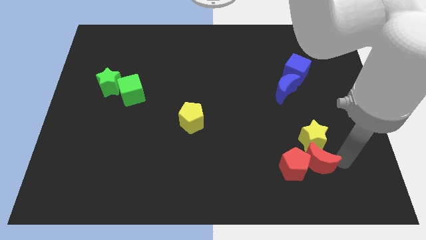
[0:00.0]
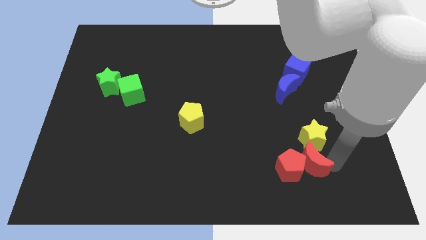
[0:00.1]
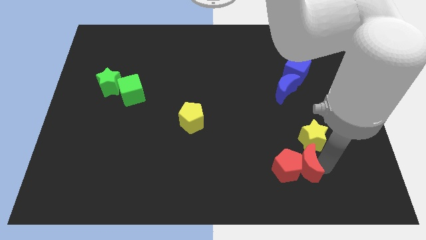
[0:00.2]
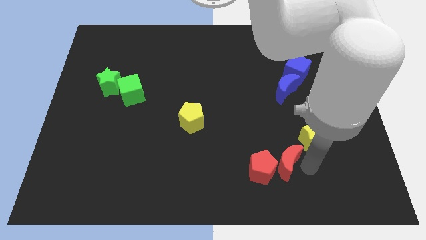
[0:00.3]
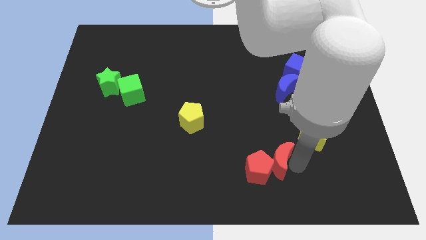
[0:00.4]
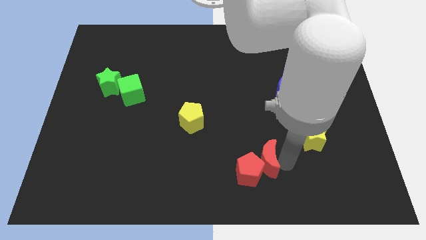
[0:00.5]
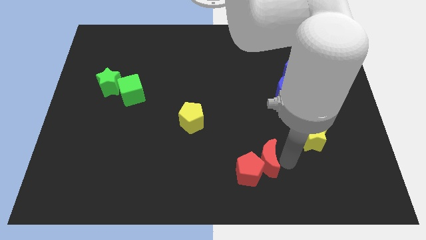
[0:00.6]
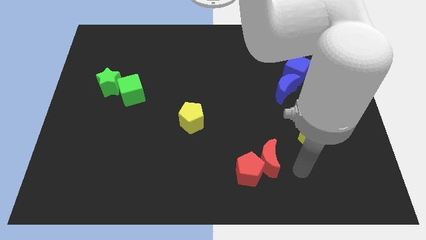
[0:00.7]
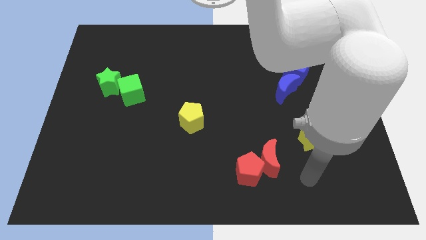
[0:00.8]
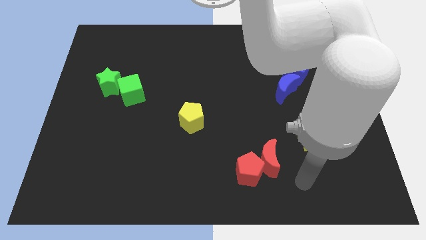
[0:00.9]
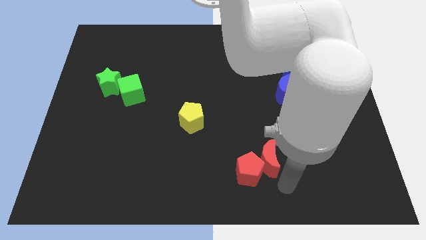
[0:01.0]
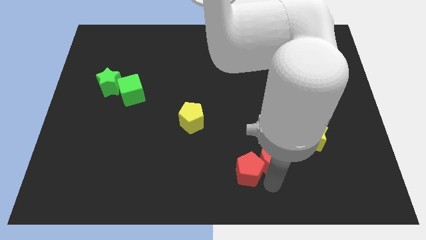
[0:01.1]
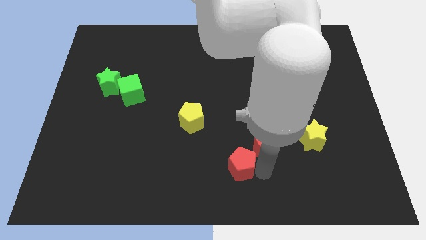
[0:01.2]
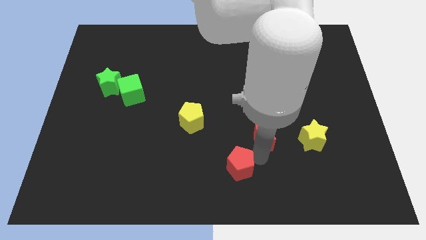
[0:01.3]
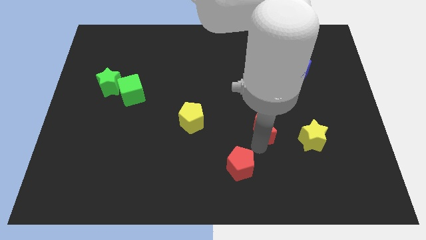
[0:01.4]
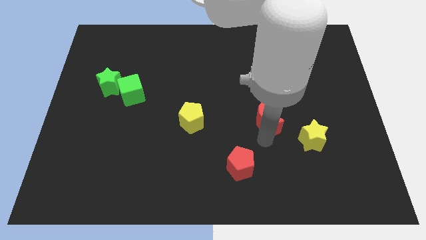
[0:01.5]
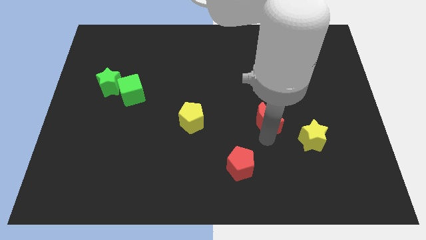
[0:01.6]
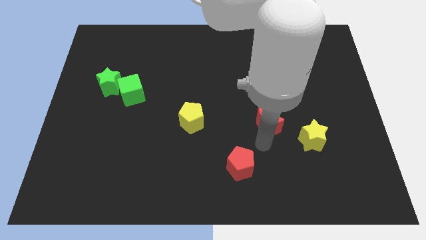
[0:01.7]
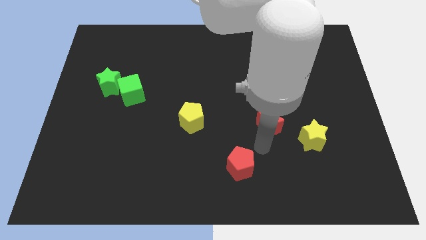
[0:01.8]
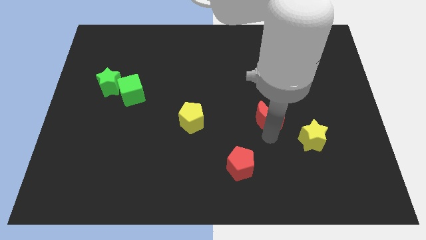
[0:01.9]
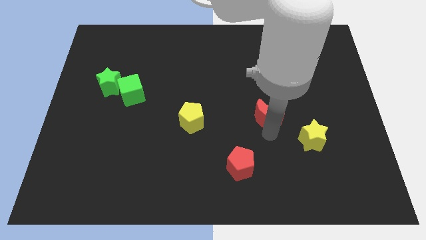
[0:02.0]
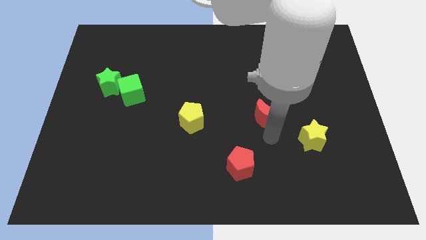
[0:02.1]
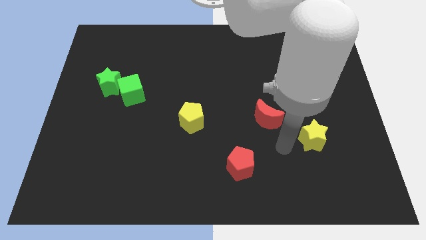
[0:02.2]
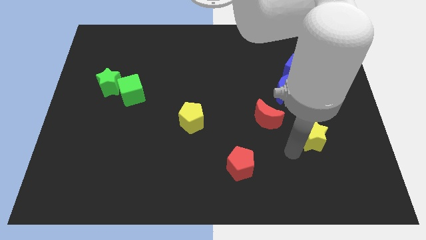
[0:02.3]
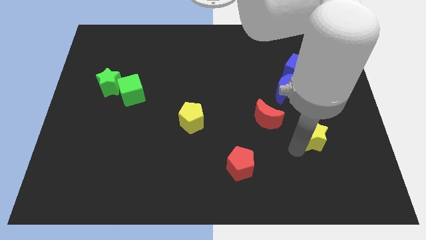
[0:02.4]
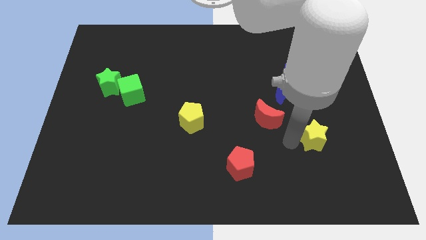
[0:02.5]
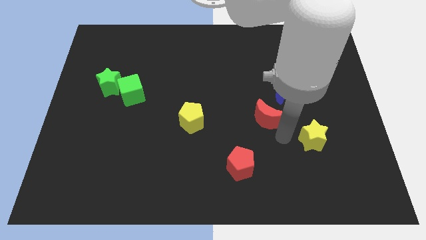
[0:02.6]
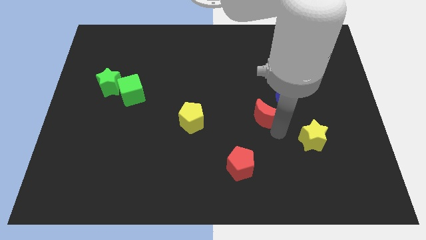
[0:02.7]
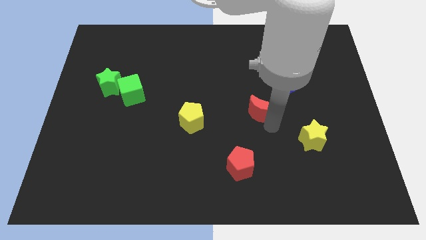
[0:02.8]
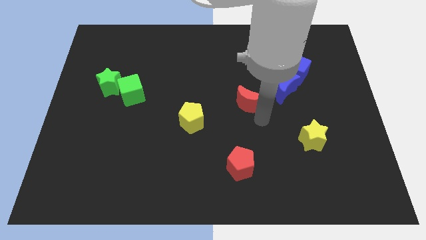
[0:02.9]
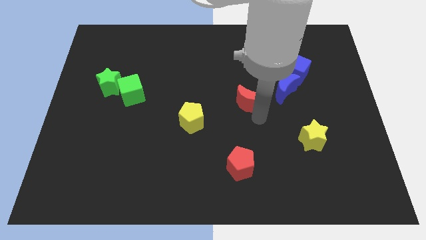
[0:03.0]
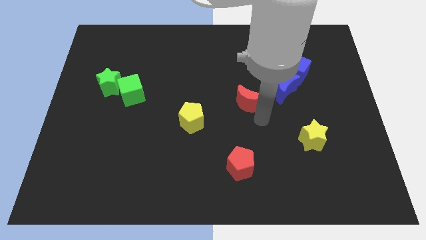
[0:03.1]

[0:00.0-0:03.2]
place red moon to the bottom left of blue moon

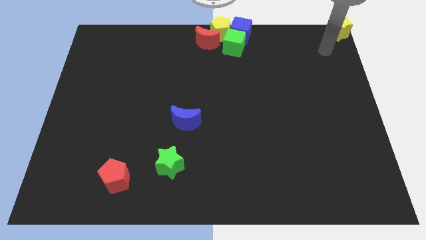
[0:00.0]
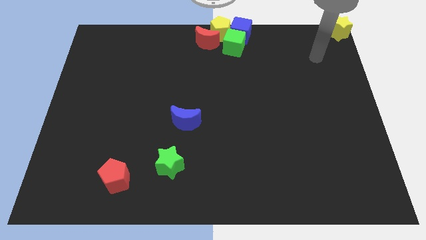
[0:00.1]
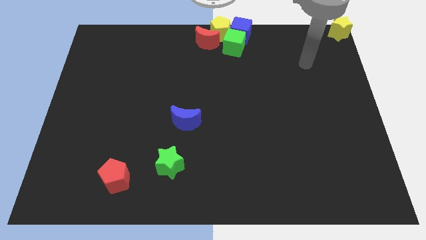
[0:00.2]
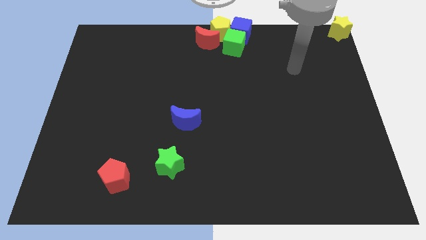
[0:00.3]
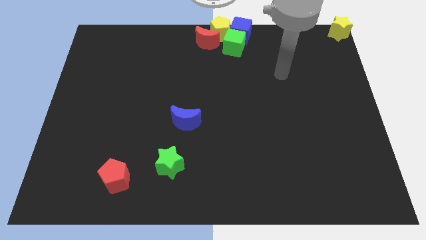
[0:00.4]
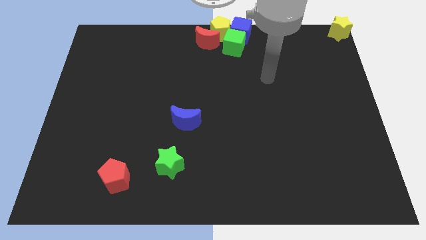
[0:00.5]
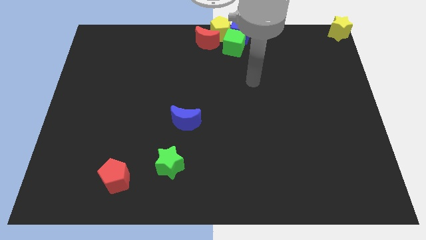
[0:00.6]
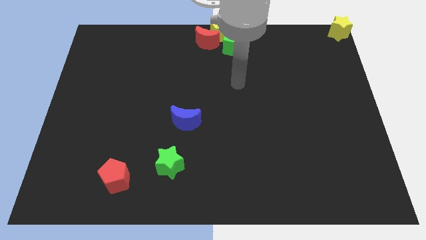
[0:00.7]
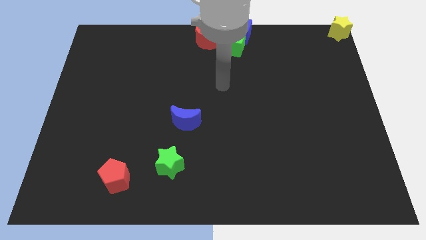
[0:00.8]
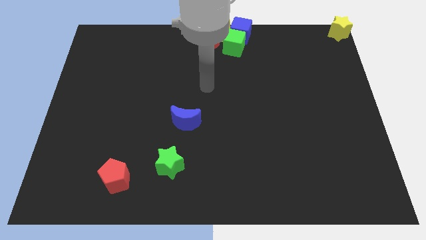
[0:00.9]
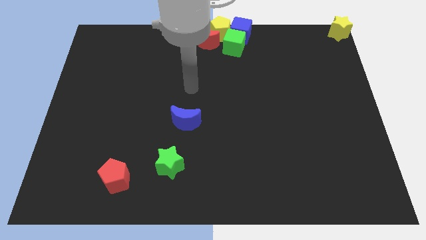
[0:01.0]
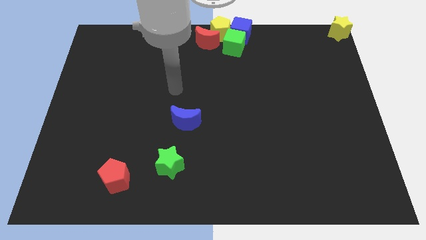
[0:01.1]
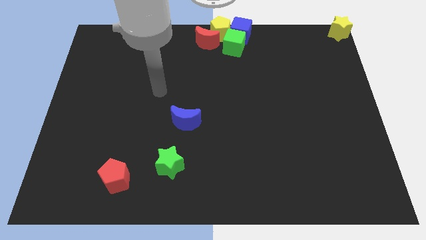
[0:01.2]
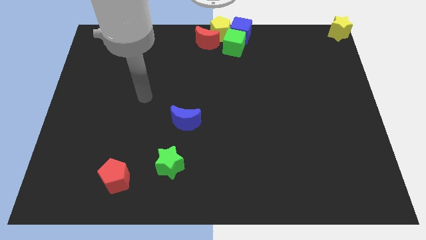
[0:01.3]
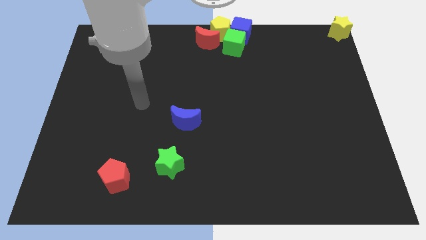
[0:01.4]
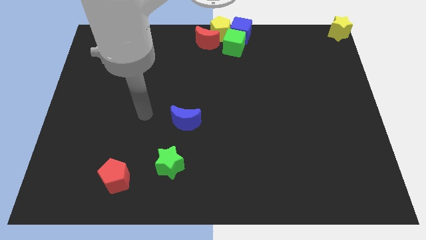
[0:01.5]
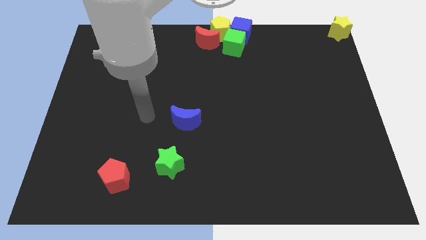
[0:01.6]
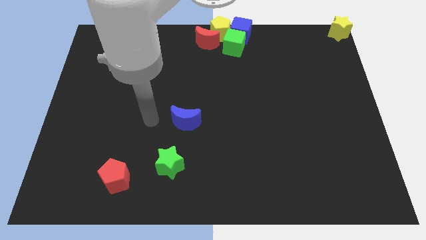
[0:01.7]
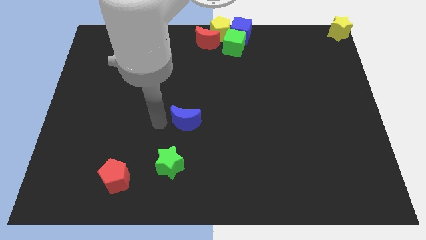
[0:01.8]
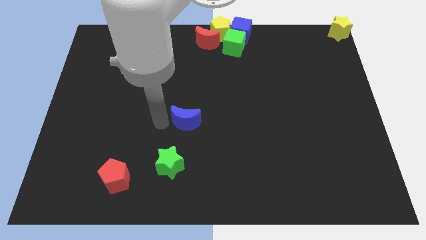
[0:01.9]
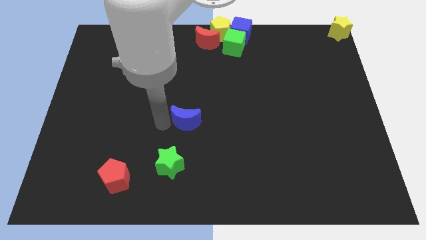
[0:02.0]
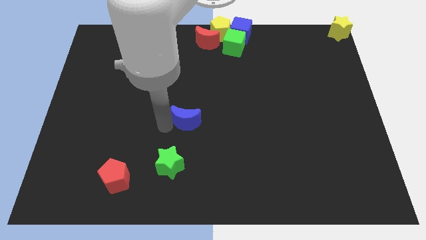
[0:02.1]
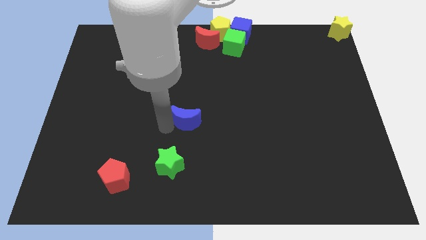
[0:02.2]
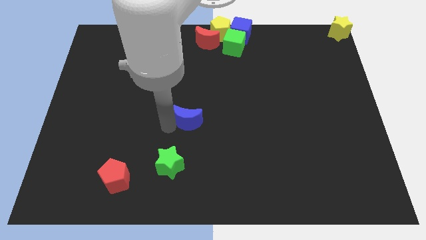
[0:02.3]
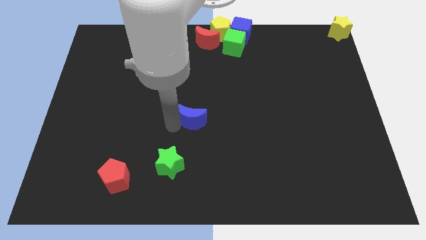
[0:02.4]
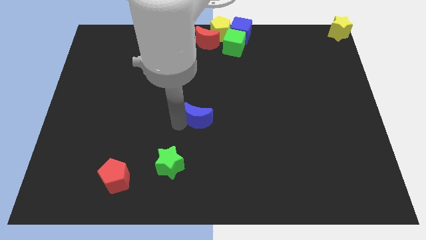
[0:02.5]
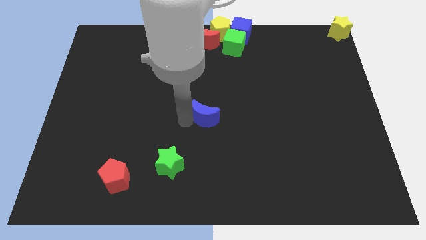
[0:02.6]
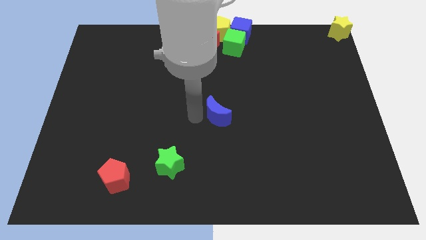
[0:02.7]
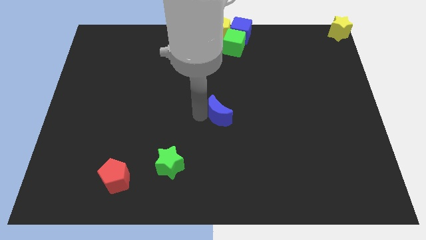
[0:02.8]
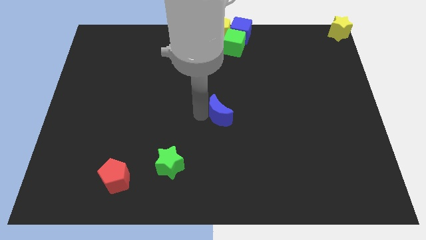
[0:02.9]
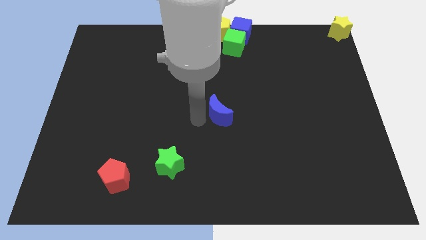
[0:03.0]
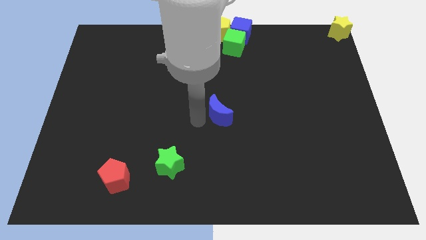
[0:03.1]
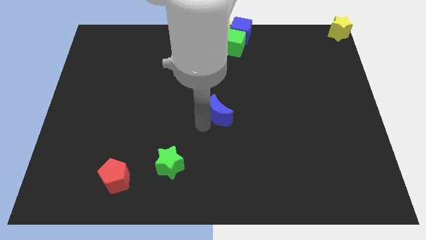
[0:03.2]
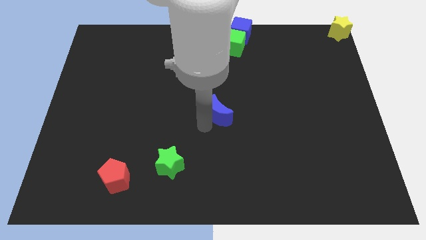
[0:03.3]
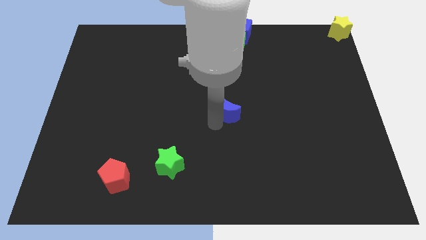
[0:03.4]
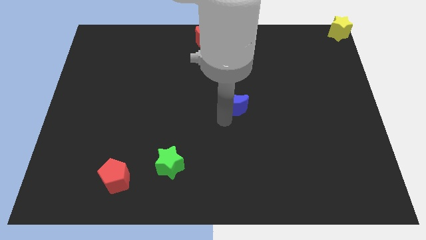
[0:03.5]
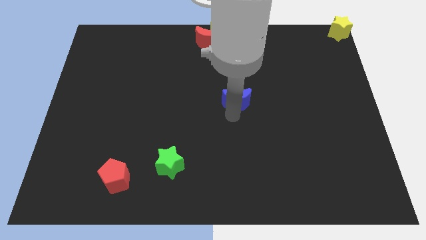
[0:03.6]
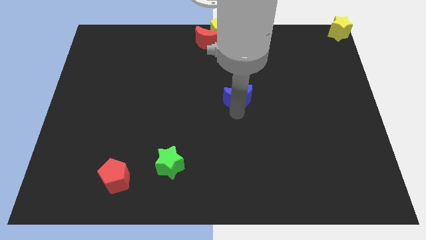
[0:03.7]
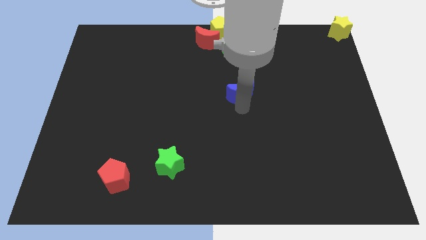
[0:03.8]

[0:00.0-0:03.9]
move the blue moon diagonally top right to the green star

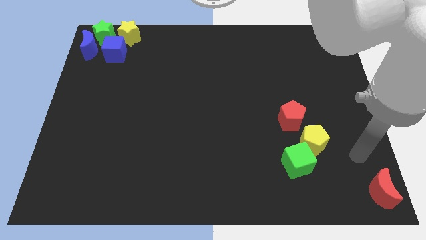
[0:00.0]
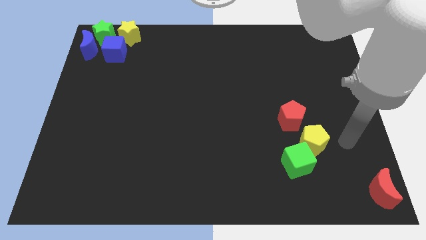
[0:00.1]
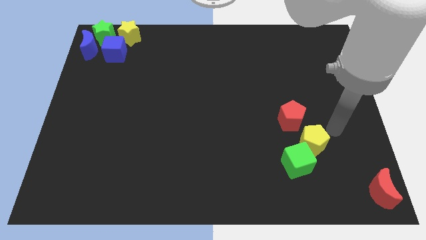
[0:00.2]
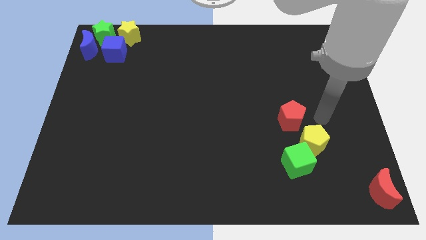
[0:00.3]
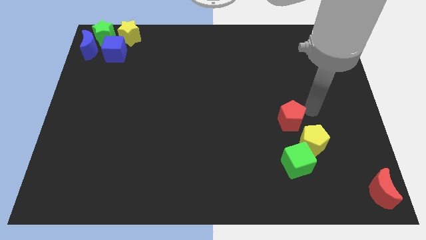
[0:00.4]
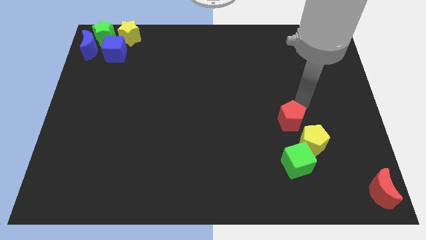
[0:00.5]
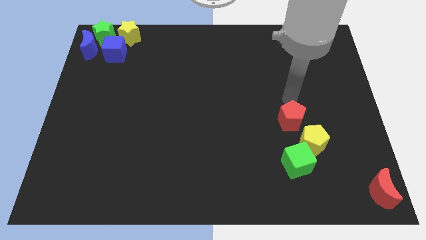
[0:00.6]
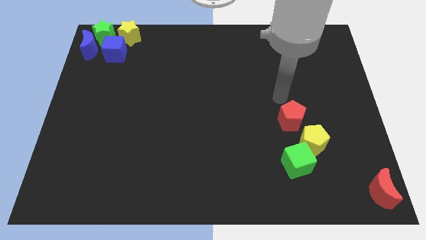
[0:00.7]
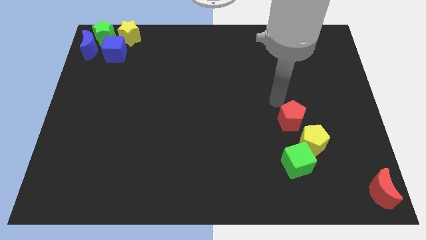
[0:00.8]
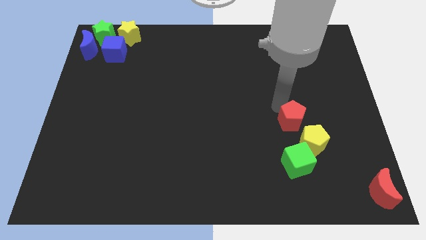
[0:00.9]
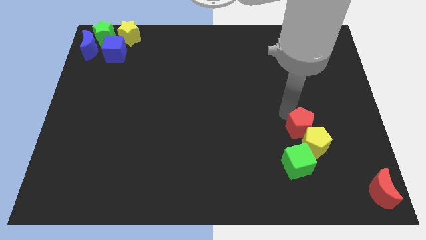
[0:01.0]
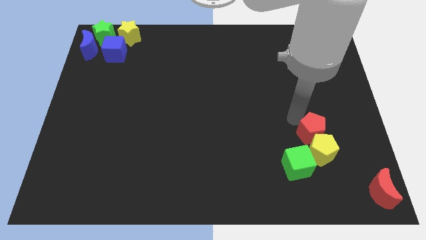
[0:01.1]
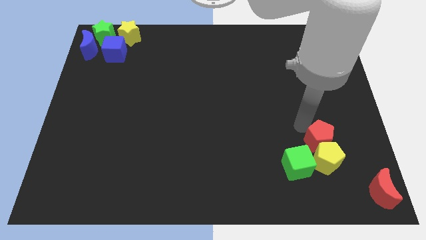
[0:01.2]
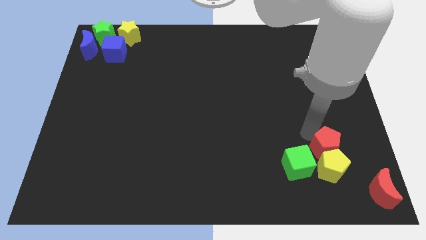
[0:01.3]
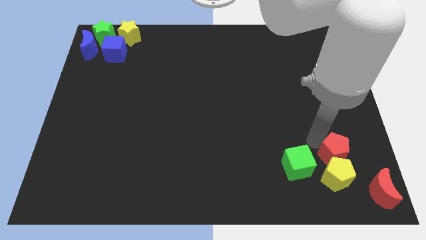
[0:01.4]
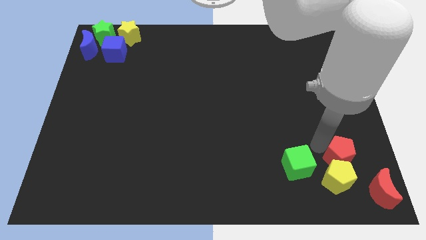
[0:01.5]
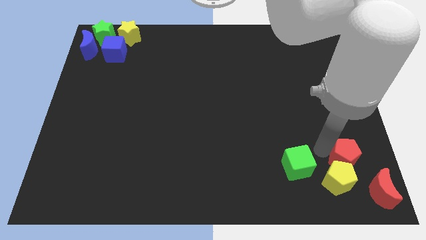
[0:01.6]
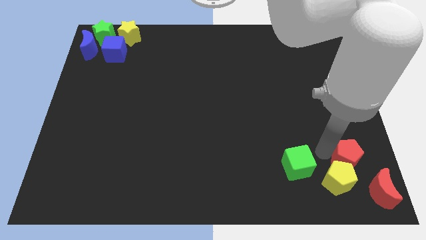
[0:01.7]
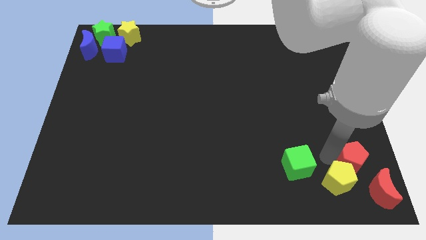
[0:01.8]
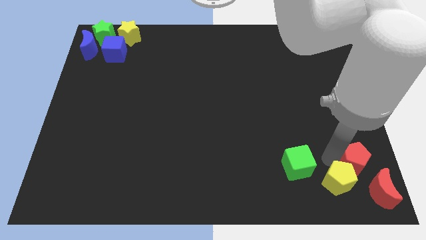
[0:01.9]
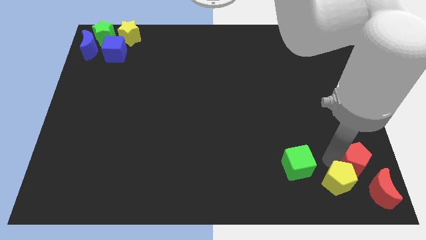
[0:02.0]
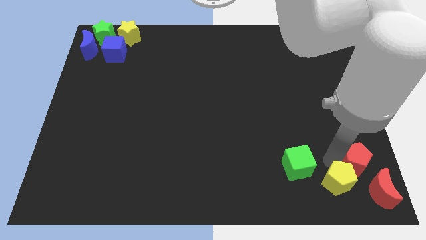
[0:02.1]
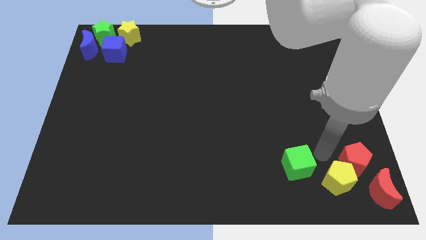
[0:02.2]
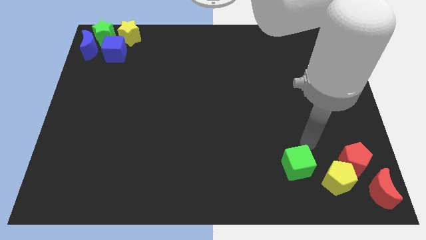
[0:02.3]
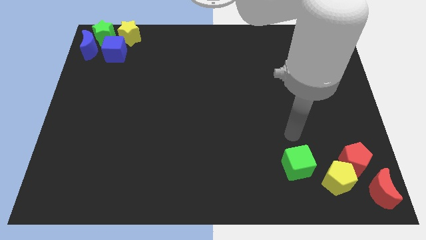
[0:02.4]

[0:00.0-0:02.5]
place red pentagon a bit near to the red crescent
